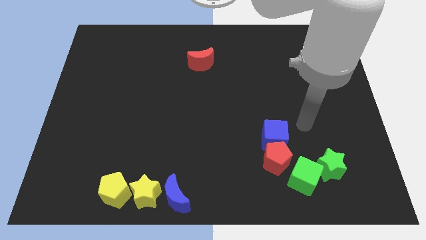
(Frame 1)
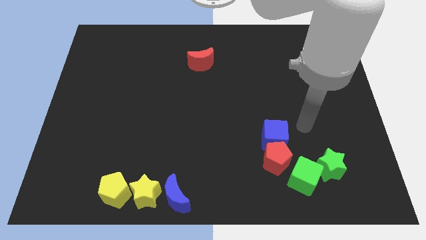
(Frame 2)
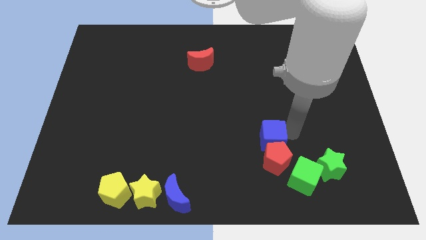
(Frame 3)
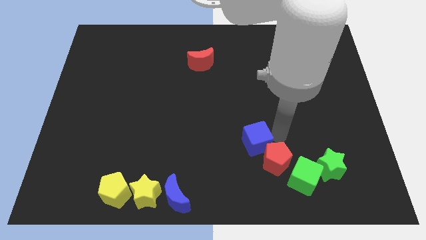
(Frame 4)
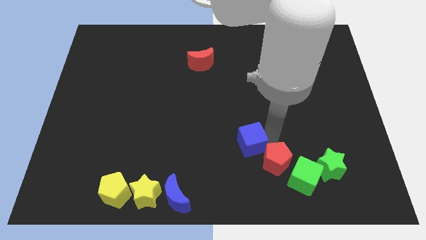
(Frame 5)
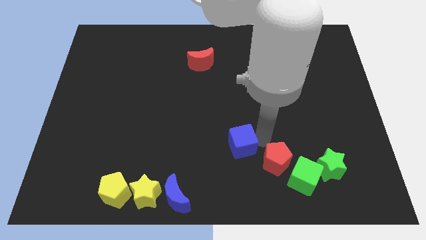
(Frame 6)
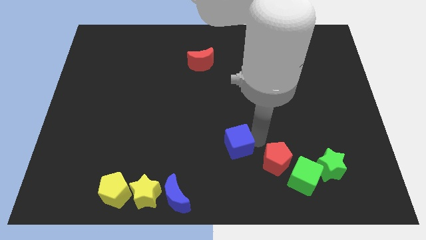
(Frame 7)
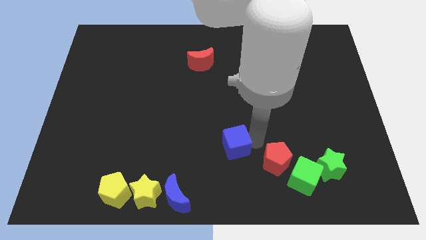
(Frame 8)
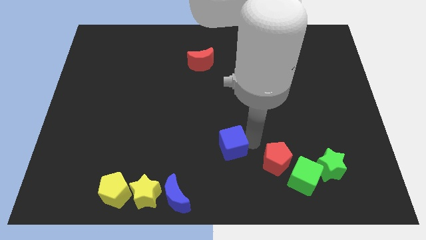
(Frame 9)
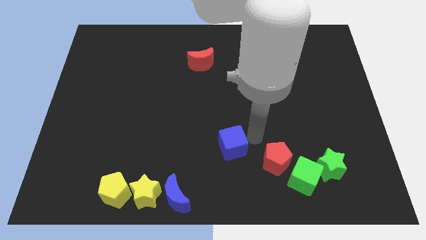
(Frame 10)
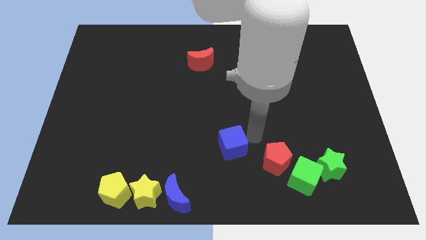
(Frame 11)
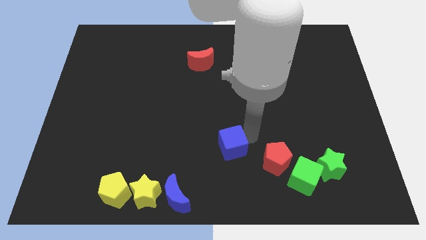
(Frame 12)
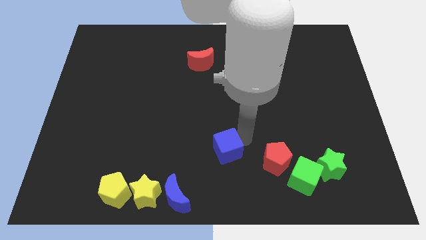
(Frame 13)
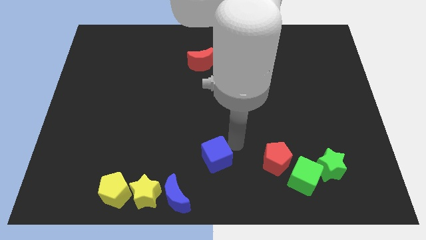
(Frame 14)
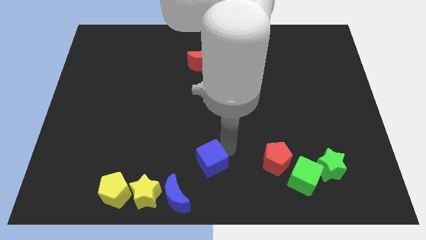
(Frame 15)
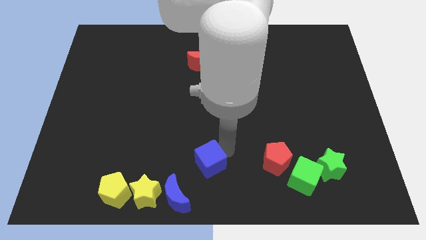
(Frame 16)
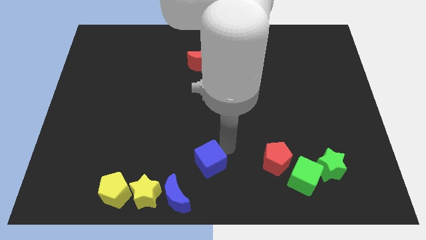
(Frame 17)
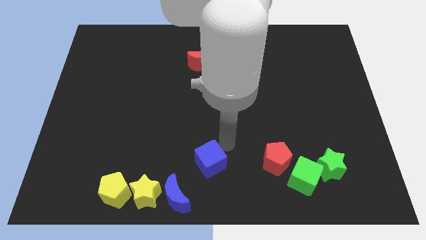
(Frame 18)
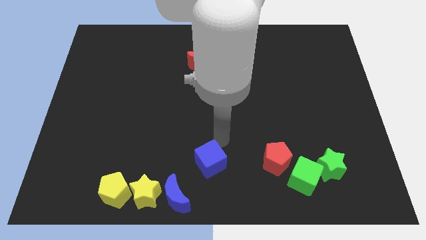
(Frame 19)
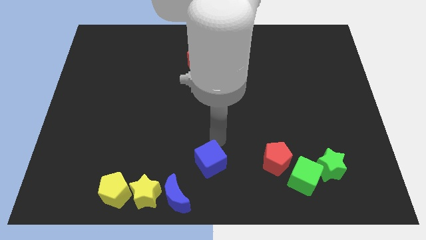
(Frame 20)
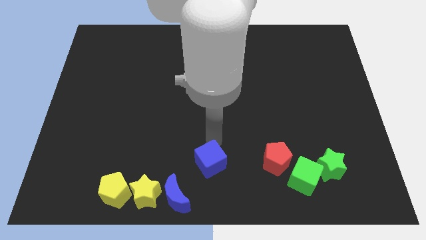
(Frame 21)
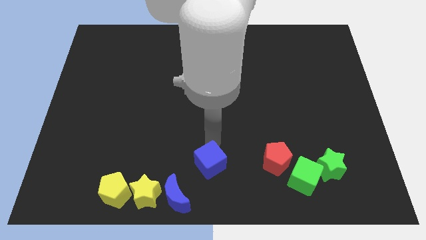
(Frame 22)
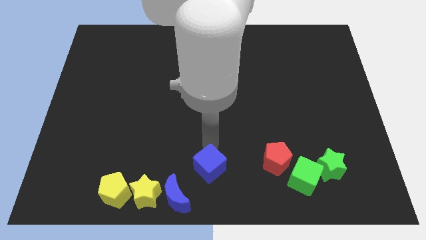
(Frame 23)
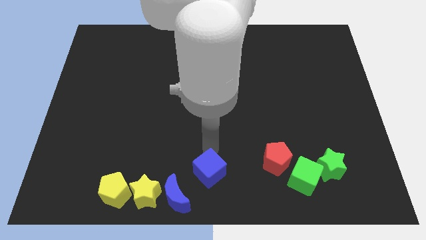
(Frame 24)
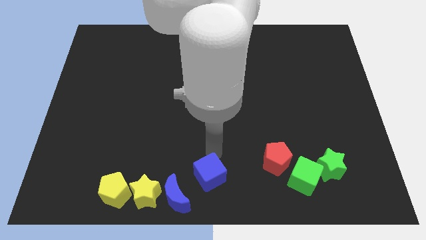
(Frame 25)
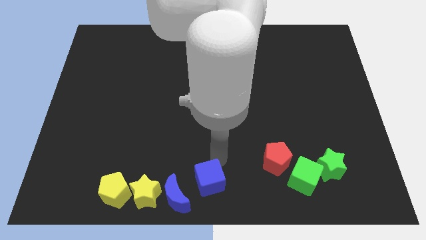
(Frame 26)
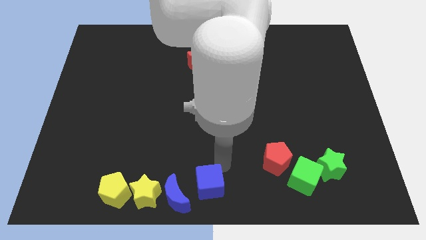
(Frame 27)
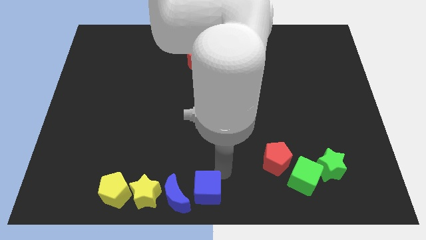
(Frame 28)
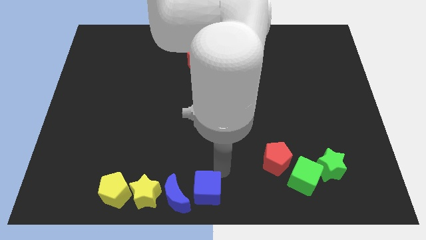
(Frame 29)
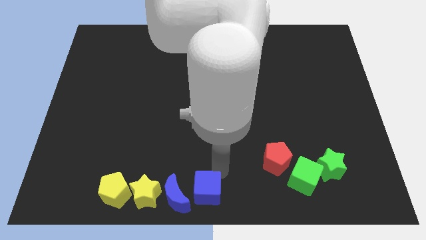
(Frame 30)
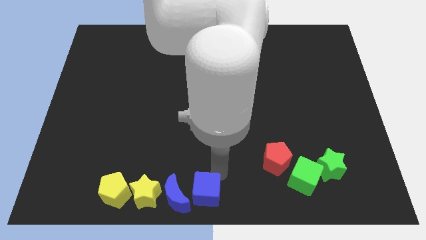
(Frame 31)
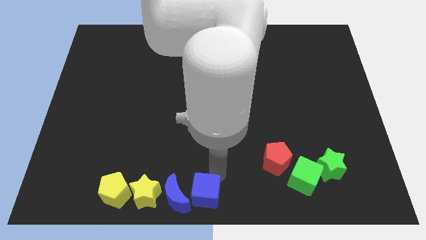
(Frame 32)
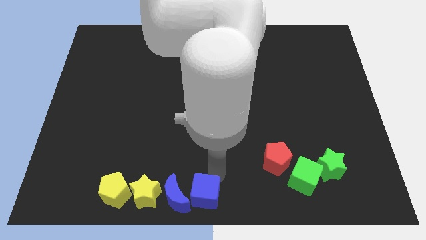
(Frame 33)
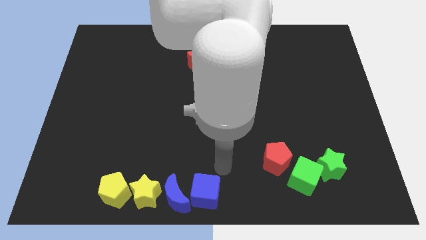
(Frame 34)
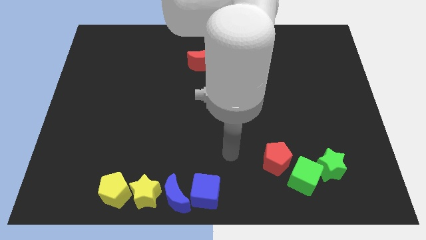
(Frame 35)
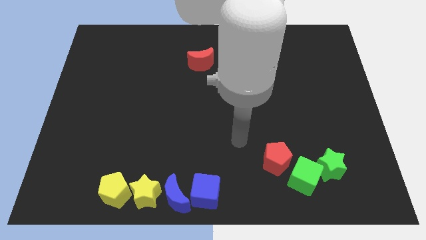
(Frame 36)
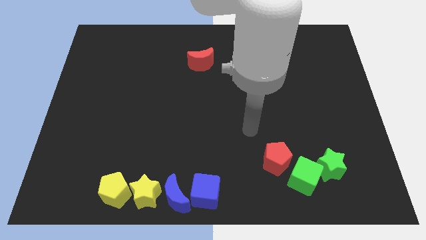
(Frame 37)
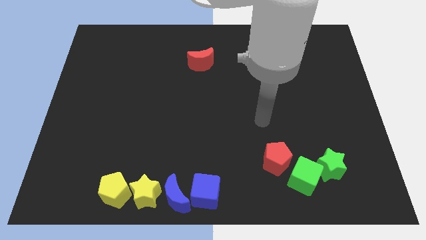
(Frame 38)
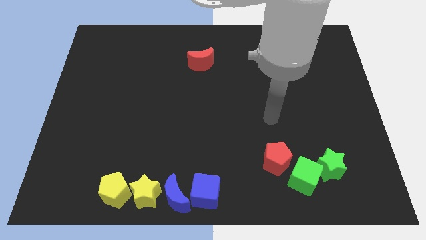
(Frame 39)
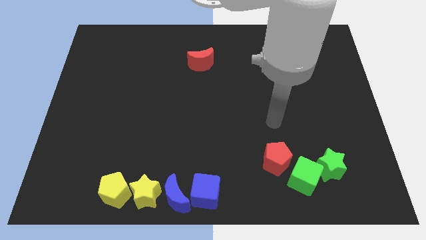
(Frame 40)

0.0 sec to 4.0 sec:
place the blue cube to the right of the blue moon

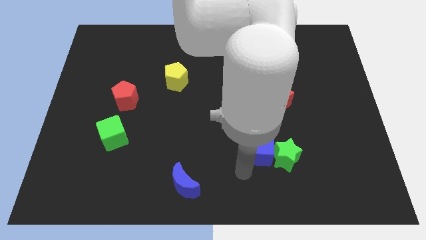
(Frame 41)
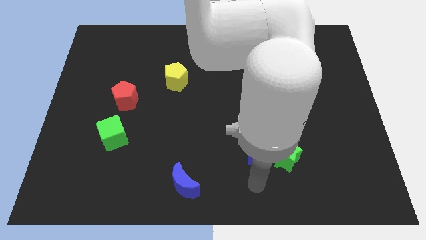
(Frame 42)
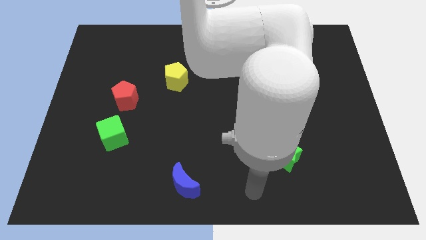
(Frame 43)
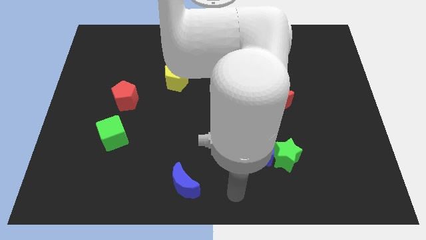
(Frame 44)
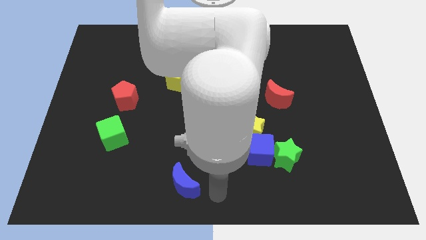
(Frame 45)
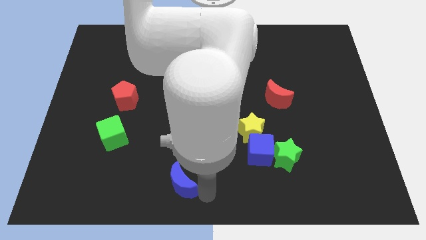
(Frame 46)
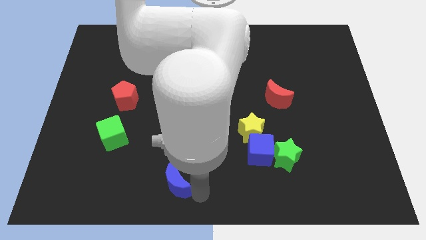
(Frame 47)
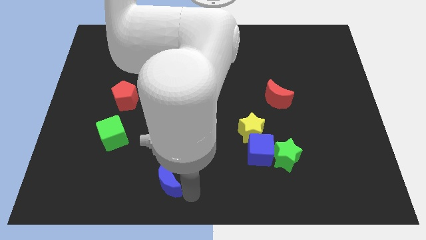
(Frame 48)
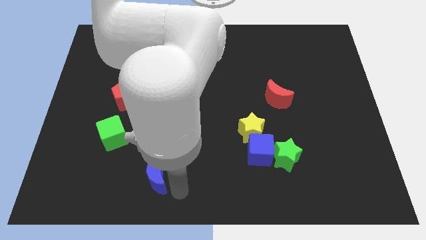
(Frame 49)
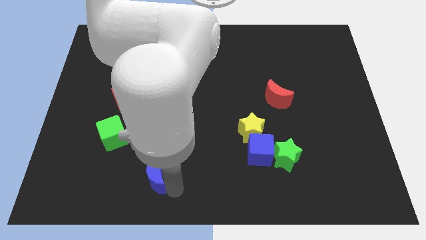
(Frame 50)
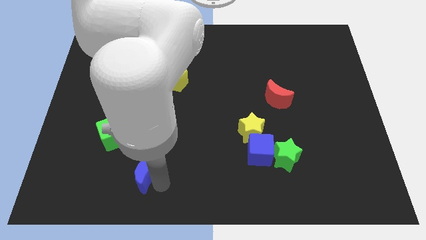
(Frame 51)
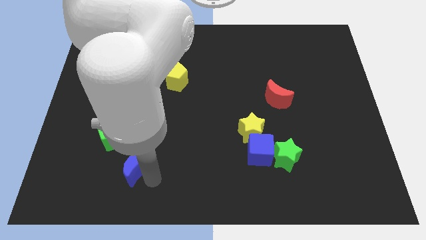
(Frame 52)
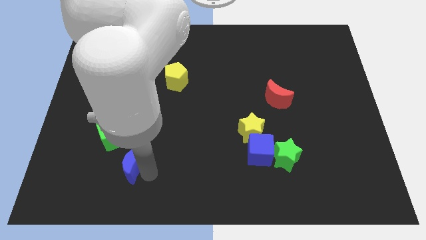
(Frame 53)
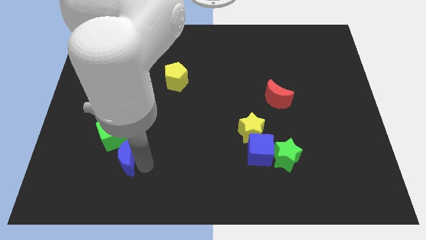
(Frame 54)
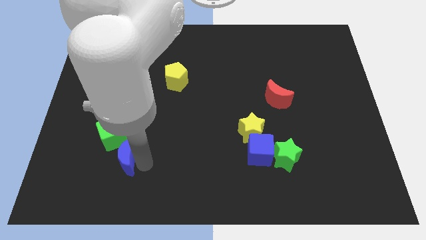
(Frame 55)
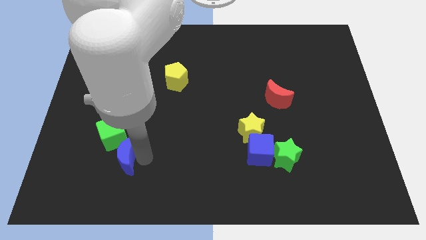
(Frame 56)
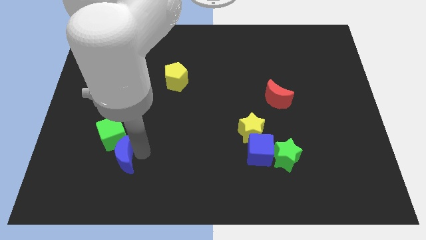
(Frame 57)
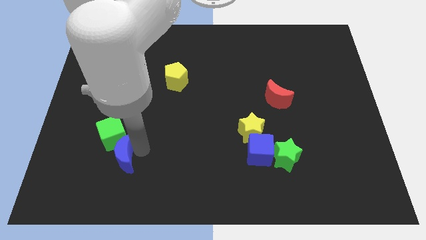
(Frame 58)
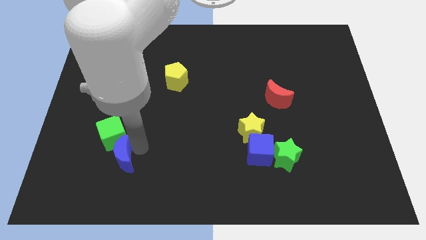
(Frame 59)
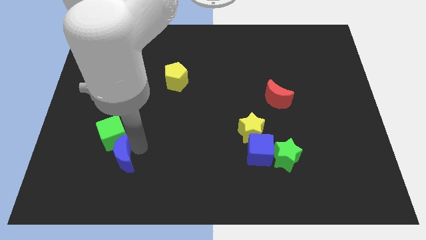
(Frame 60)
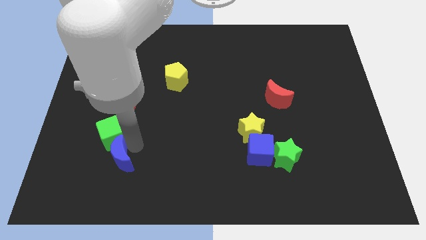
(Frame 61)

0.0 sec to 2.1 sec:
push blue moon into green cube

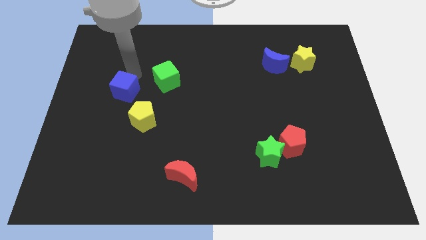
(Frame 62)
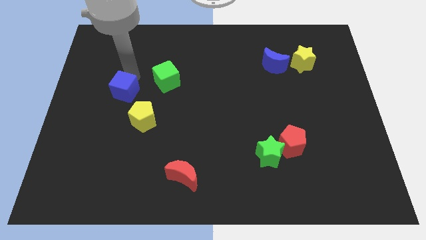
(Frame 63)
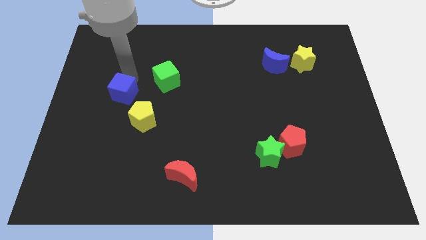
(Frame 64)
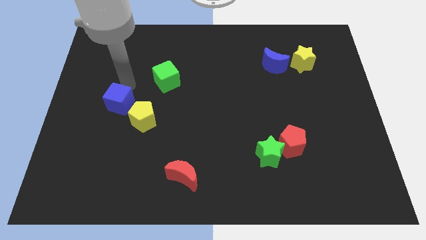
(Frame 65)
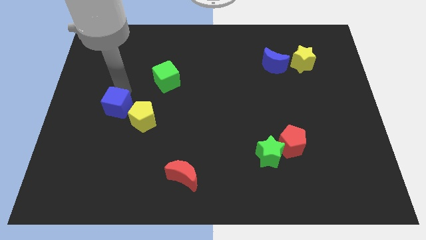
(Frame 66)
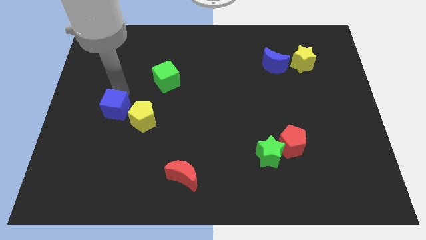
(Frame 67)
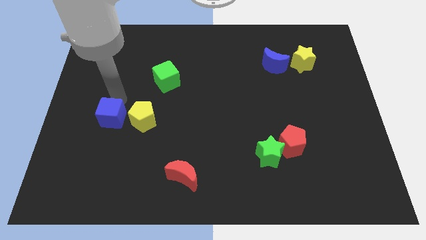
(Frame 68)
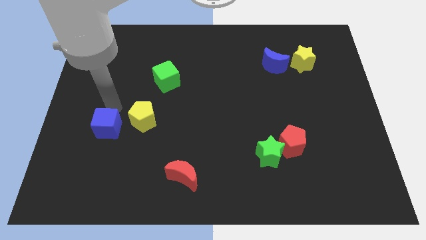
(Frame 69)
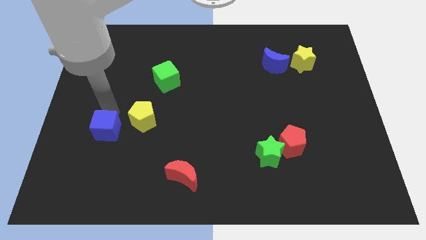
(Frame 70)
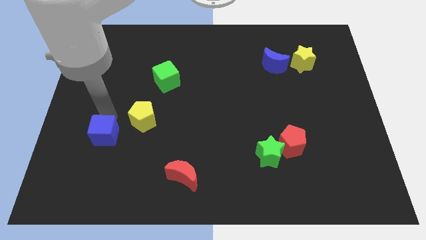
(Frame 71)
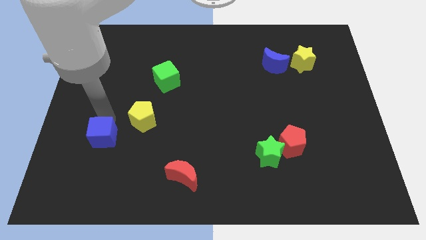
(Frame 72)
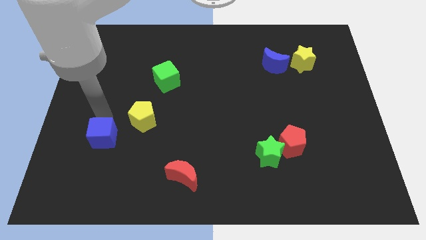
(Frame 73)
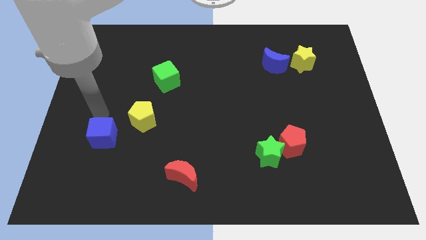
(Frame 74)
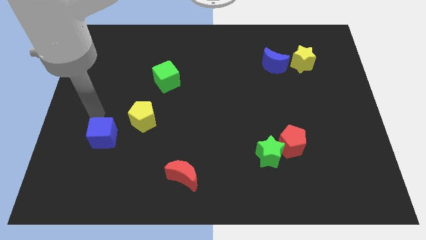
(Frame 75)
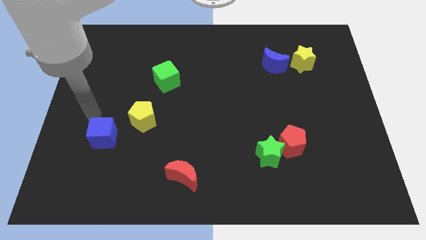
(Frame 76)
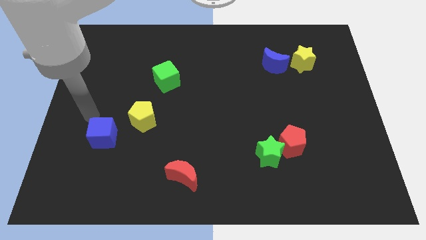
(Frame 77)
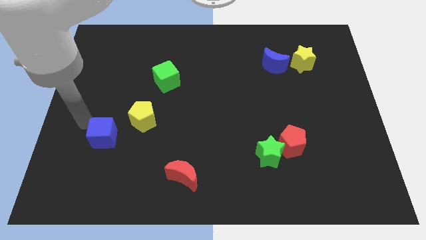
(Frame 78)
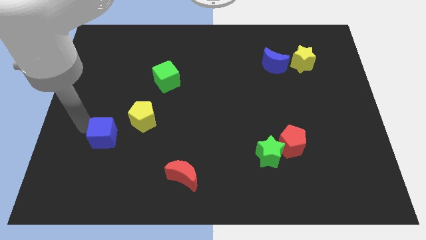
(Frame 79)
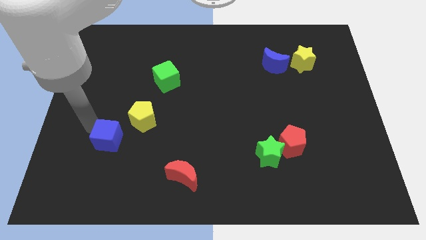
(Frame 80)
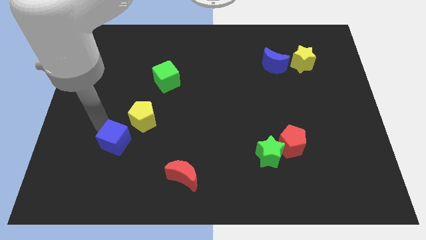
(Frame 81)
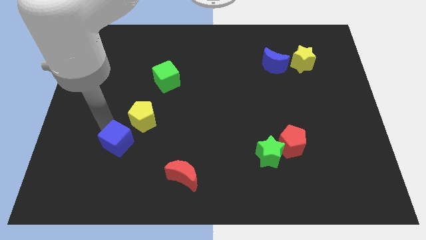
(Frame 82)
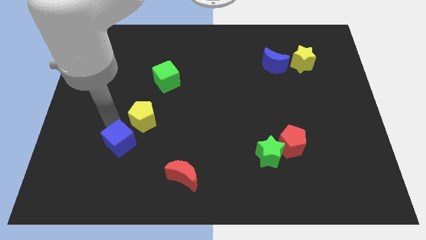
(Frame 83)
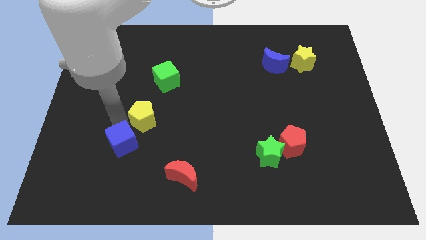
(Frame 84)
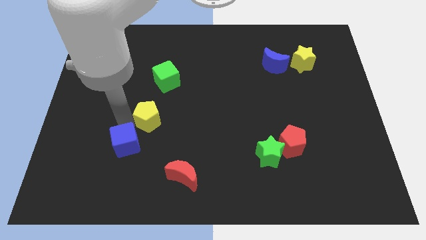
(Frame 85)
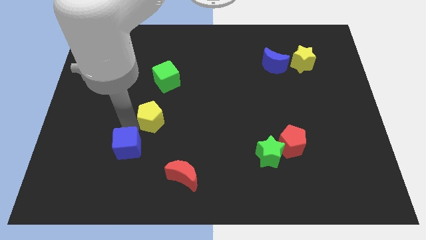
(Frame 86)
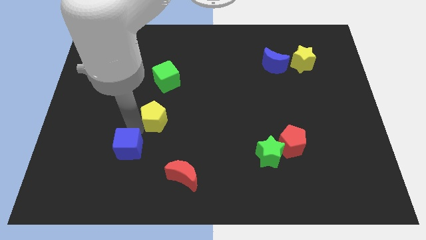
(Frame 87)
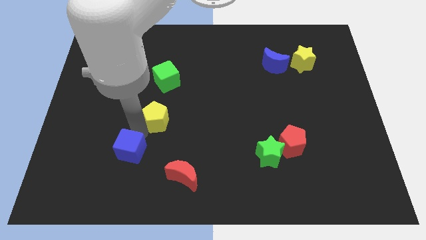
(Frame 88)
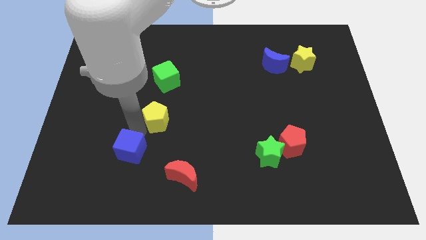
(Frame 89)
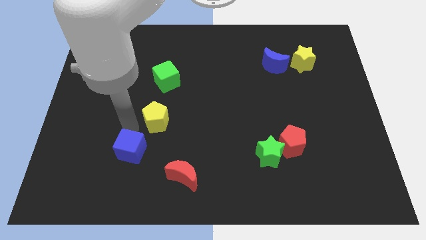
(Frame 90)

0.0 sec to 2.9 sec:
move blue cube left below the yellow pentagon
